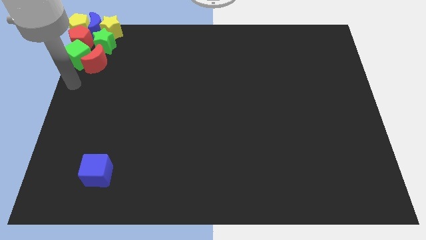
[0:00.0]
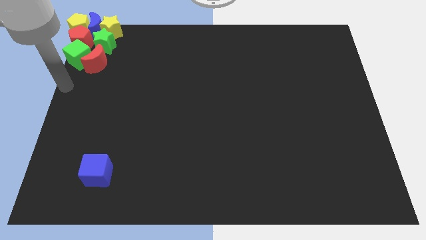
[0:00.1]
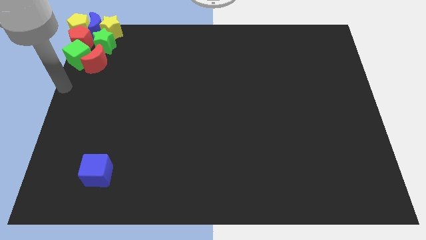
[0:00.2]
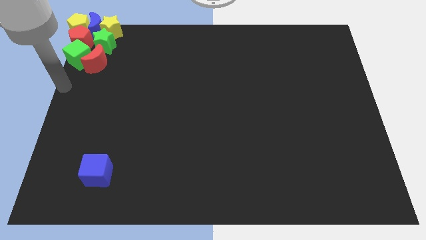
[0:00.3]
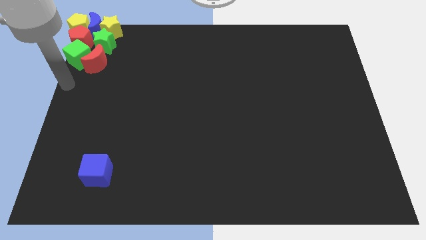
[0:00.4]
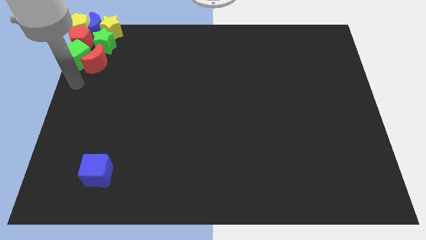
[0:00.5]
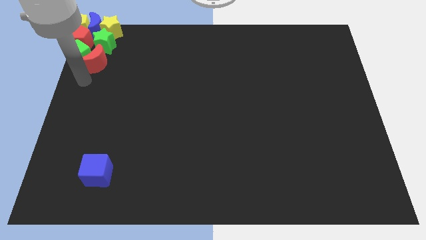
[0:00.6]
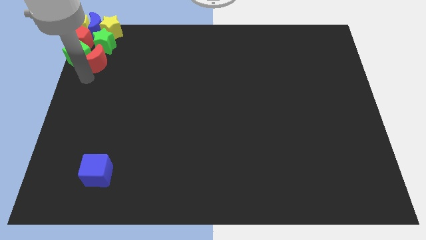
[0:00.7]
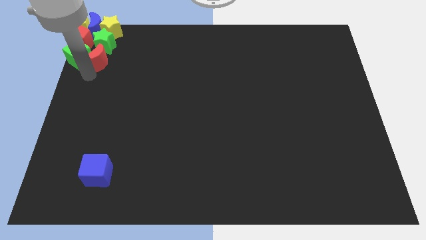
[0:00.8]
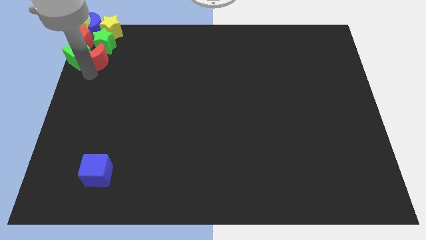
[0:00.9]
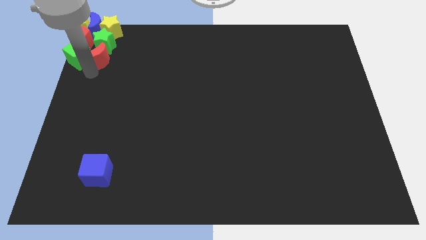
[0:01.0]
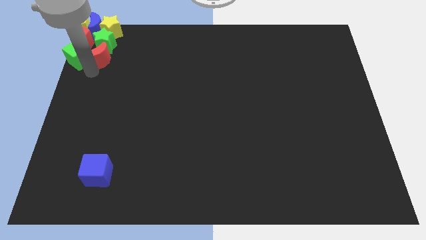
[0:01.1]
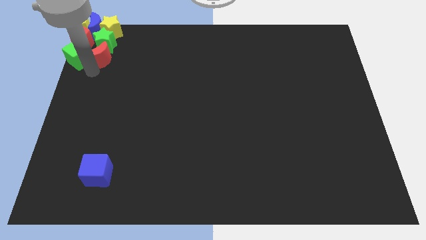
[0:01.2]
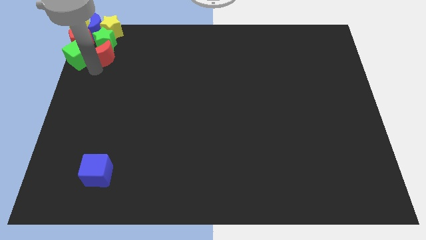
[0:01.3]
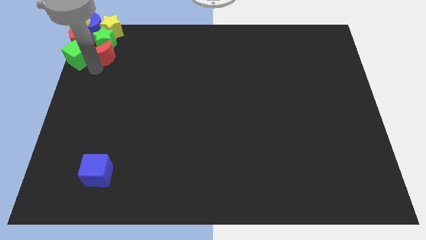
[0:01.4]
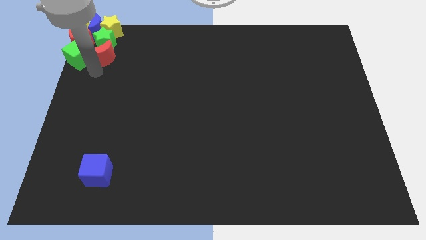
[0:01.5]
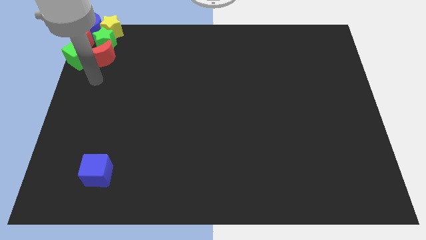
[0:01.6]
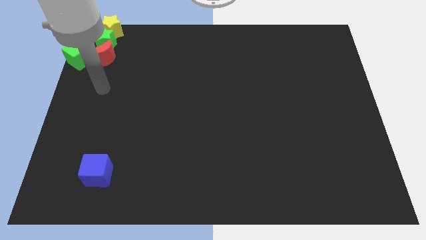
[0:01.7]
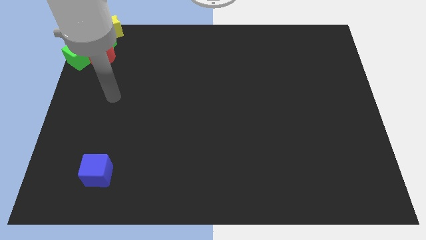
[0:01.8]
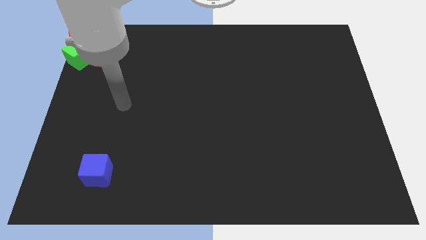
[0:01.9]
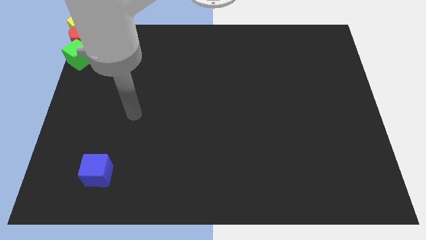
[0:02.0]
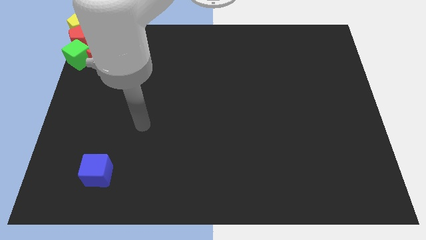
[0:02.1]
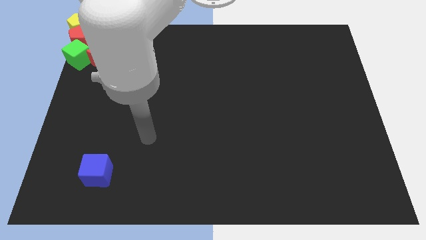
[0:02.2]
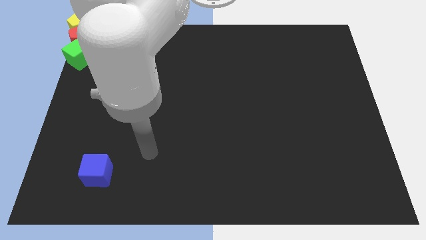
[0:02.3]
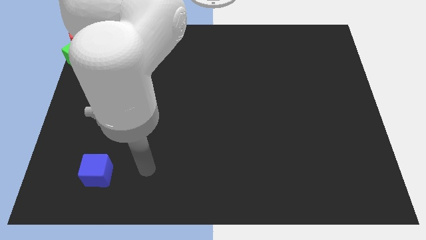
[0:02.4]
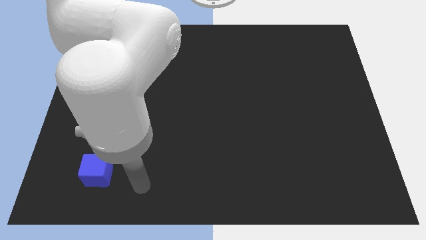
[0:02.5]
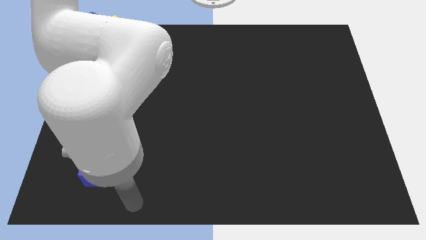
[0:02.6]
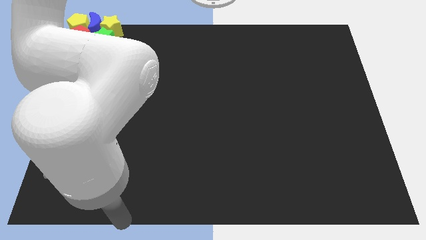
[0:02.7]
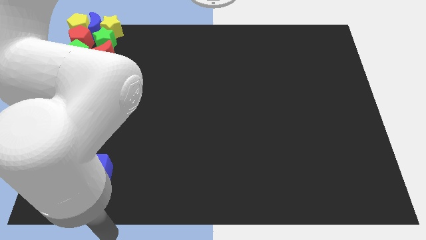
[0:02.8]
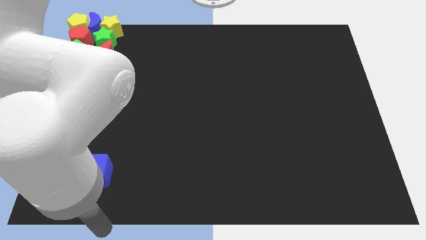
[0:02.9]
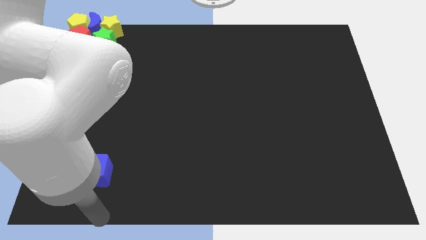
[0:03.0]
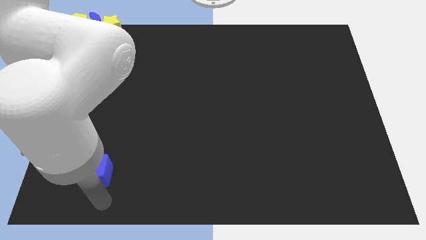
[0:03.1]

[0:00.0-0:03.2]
push the red moon into the green star

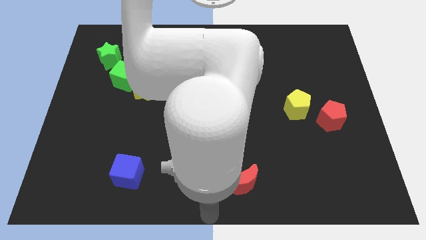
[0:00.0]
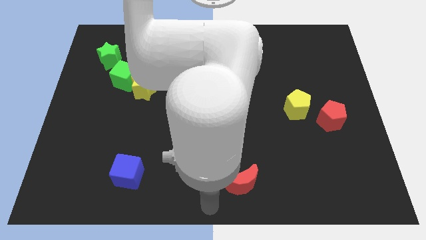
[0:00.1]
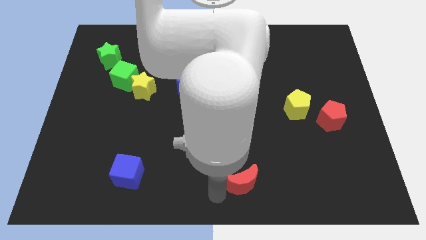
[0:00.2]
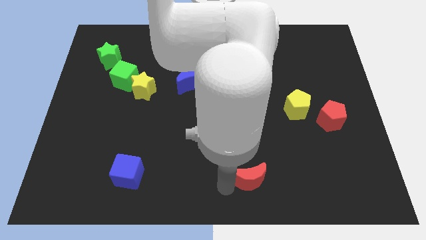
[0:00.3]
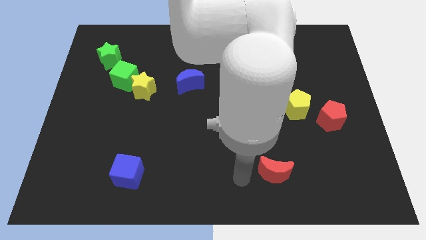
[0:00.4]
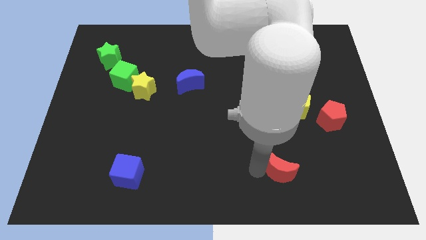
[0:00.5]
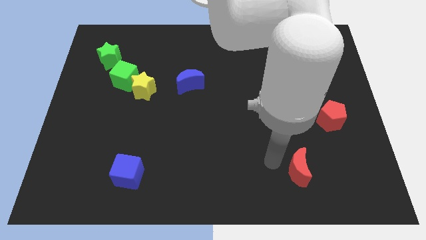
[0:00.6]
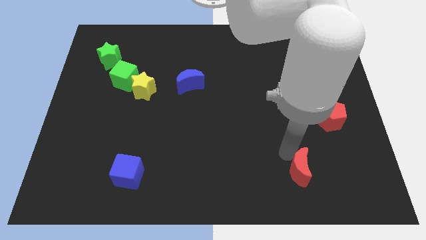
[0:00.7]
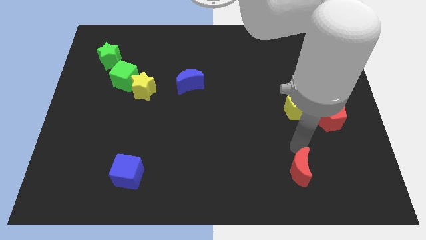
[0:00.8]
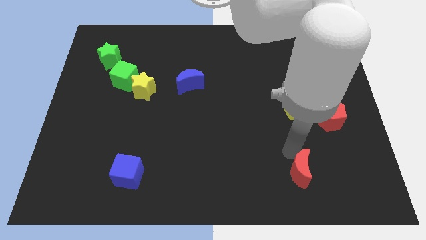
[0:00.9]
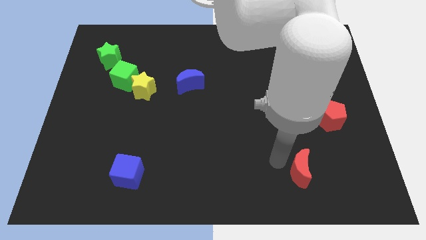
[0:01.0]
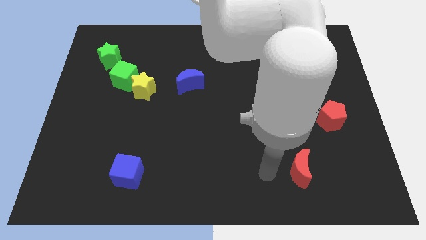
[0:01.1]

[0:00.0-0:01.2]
slightly push the red crescent towards the bottom left of the board

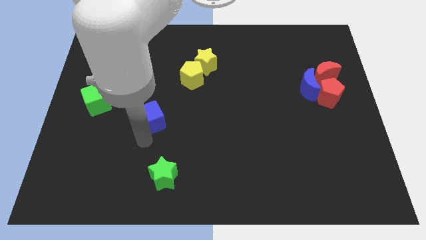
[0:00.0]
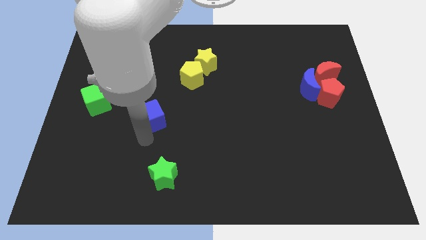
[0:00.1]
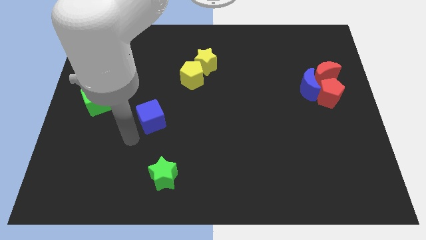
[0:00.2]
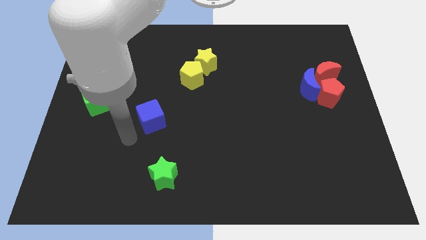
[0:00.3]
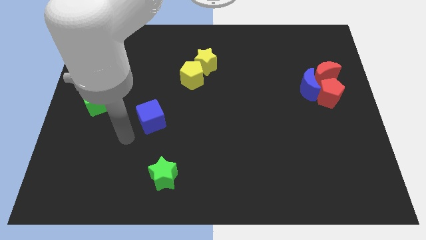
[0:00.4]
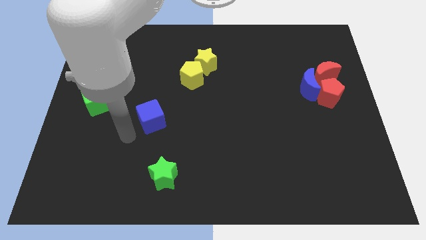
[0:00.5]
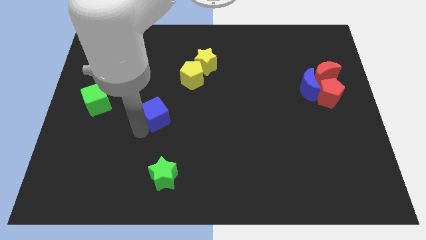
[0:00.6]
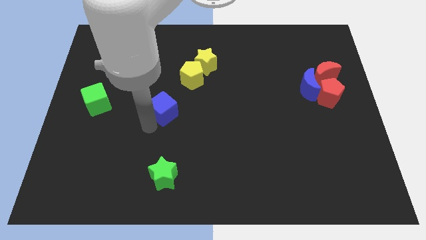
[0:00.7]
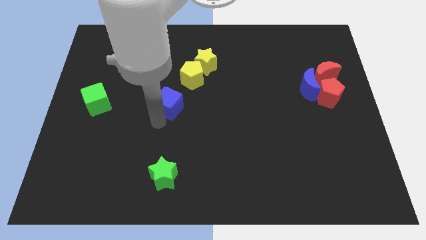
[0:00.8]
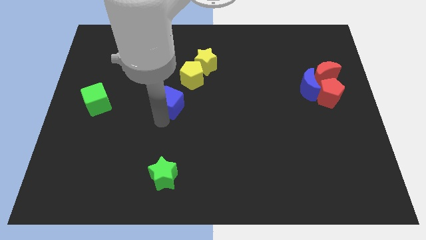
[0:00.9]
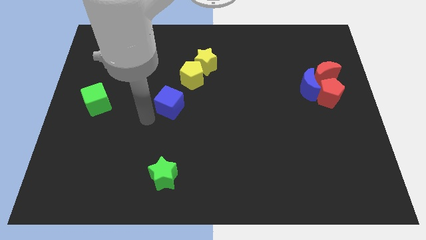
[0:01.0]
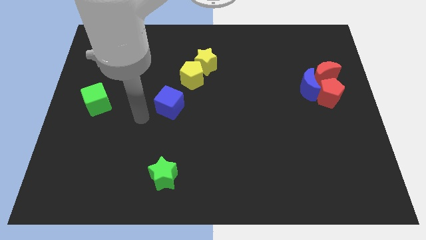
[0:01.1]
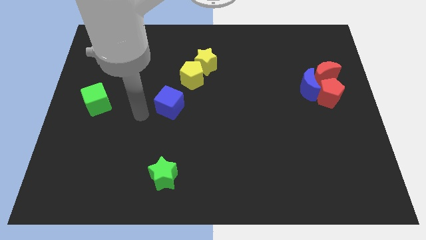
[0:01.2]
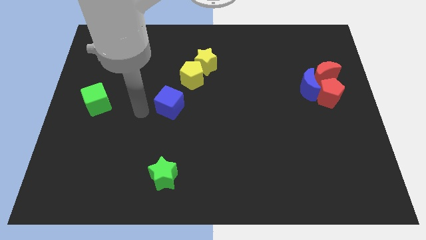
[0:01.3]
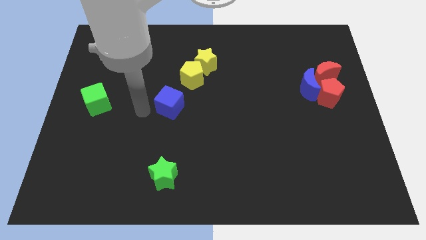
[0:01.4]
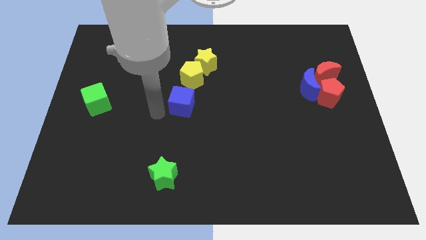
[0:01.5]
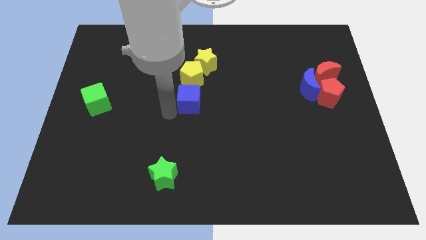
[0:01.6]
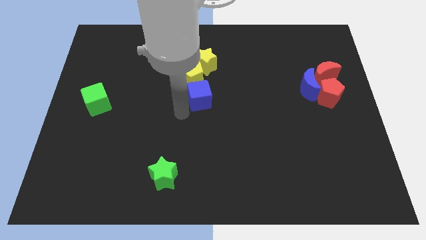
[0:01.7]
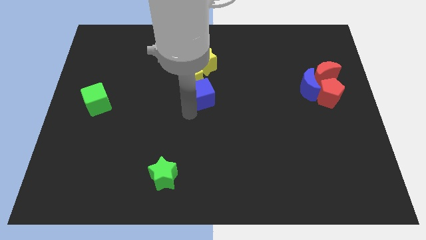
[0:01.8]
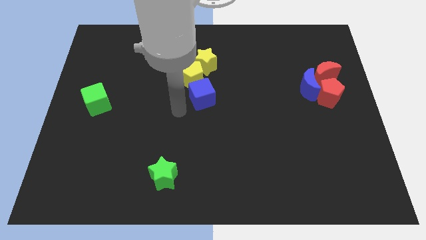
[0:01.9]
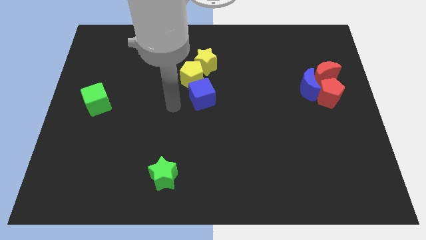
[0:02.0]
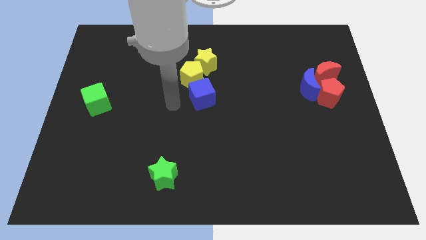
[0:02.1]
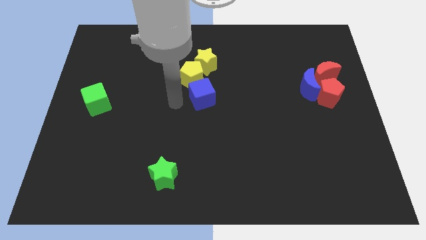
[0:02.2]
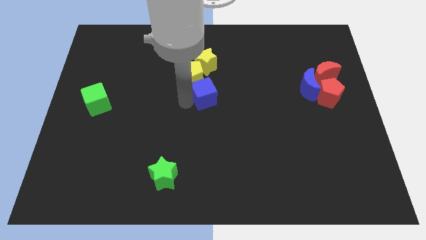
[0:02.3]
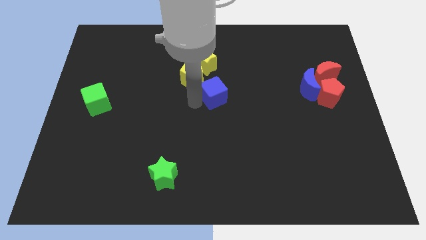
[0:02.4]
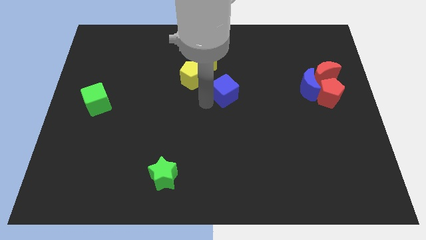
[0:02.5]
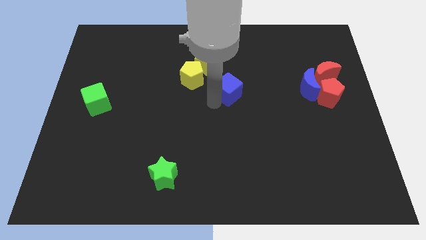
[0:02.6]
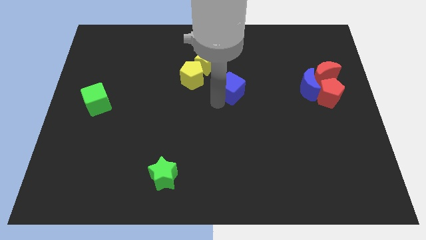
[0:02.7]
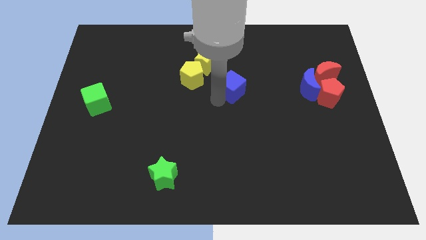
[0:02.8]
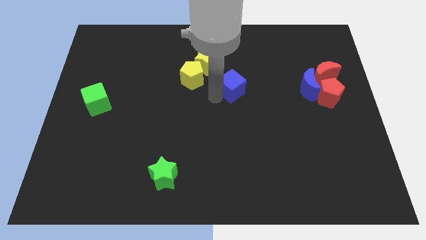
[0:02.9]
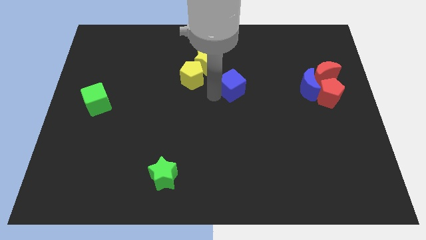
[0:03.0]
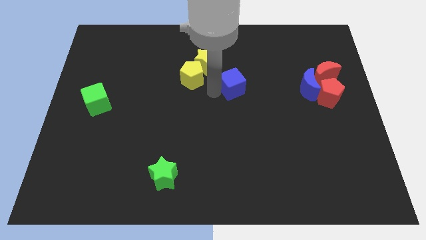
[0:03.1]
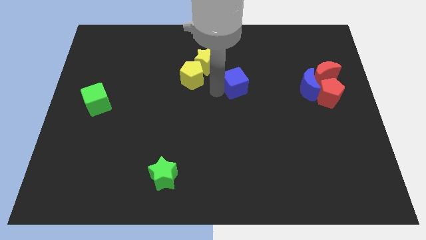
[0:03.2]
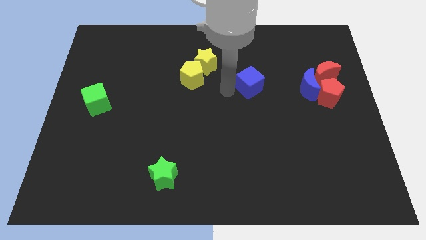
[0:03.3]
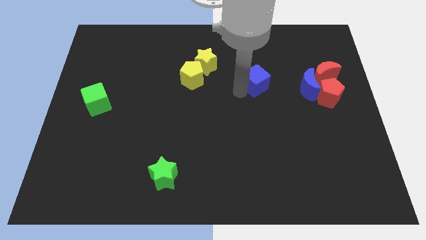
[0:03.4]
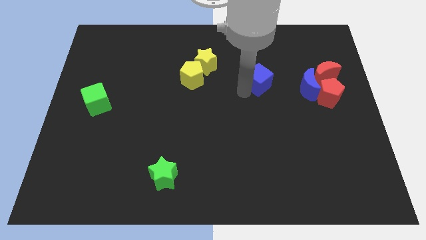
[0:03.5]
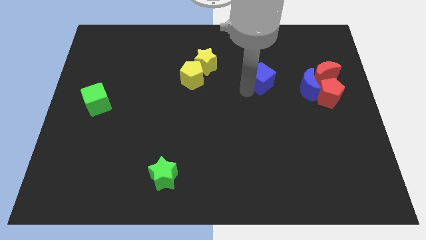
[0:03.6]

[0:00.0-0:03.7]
place the blue crescent in between the yellow pentagon and blue crescent

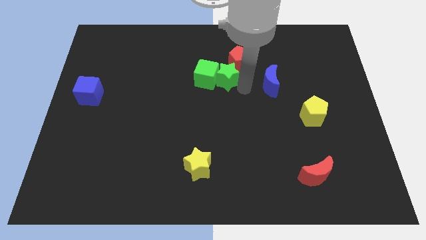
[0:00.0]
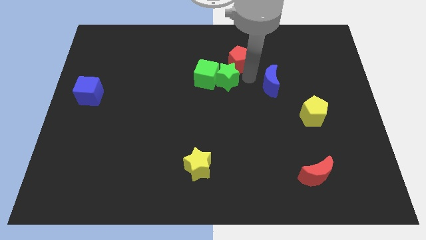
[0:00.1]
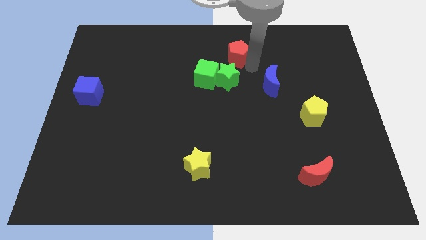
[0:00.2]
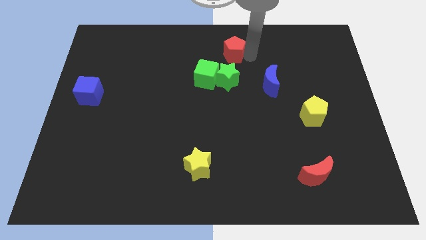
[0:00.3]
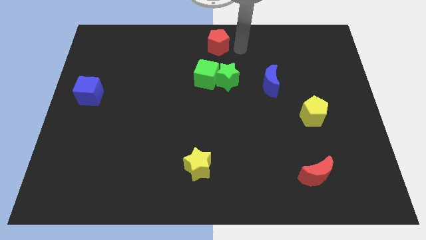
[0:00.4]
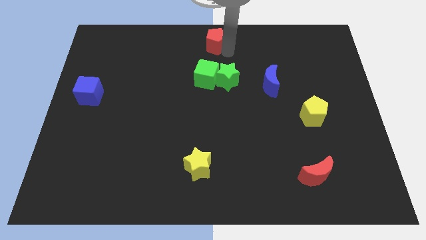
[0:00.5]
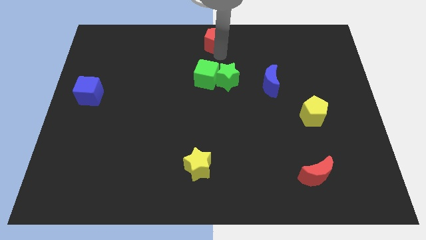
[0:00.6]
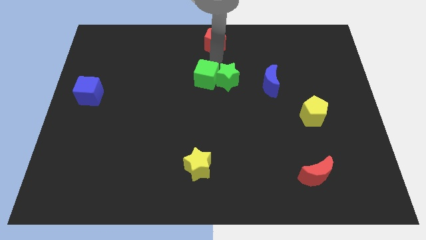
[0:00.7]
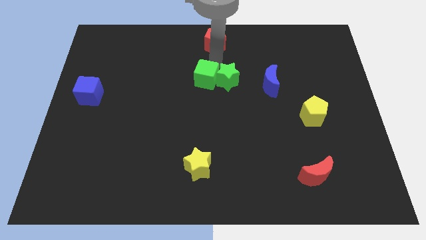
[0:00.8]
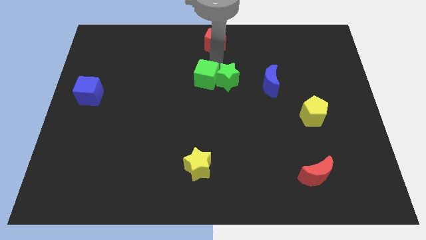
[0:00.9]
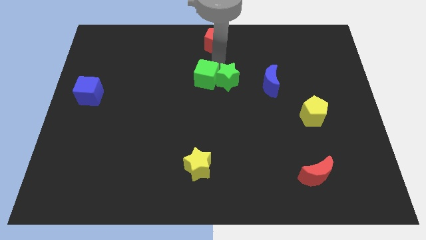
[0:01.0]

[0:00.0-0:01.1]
push the red pentagon to the top center of the board
